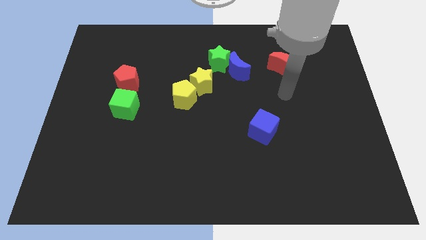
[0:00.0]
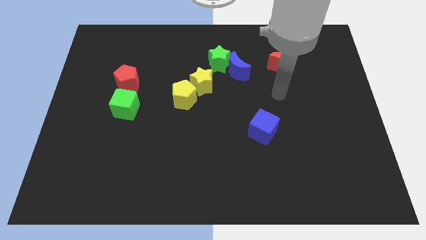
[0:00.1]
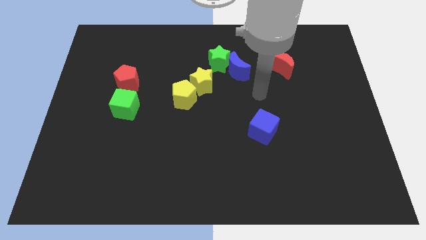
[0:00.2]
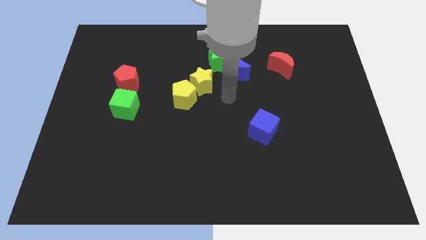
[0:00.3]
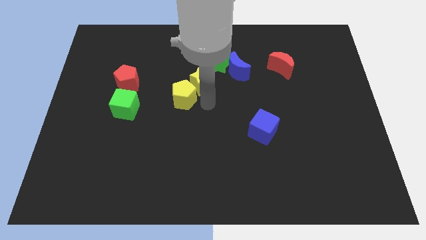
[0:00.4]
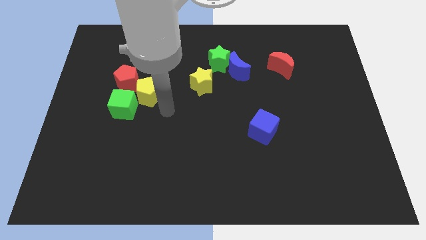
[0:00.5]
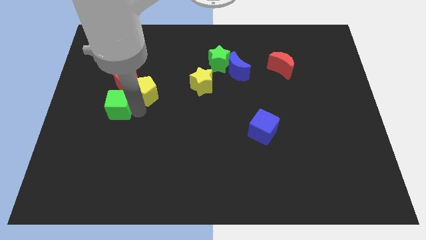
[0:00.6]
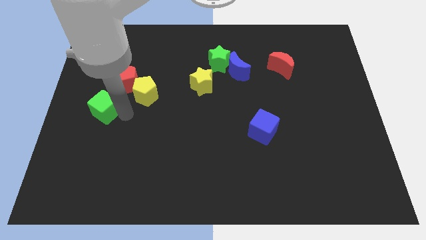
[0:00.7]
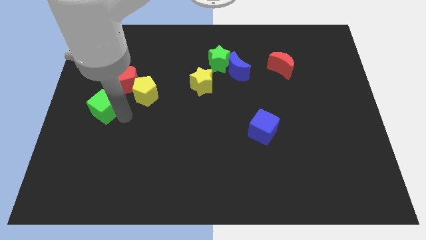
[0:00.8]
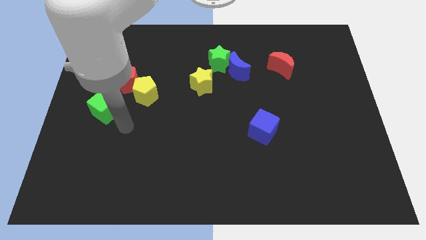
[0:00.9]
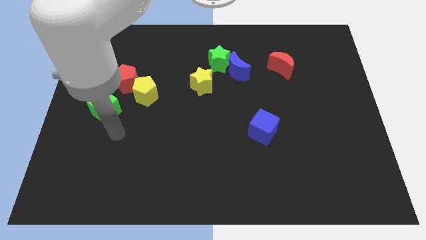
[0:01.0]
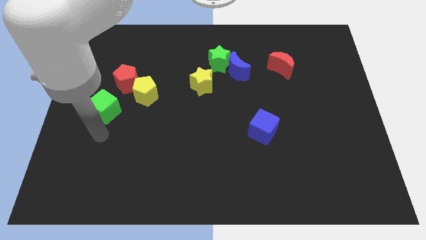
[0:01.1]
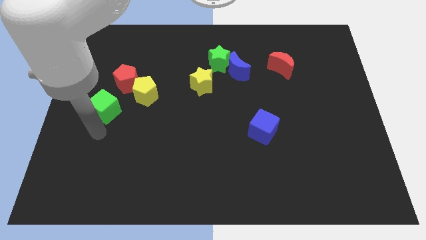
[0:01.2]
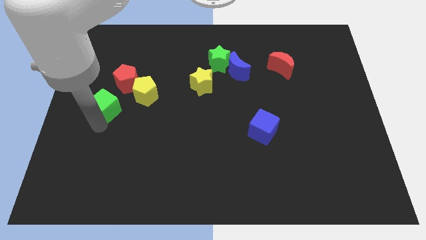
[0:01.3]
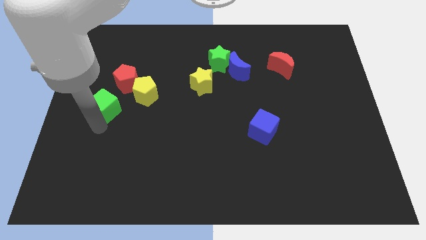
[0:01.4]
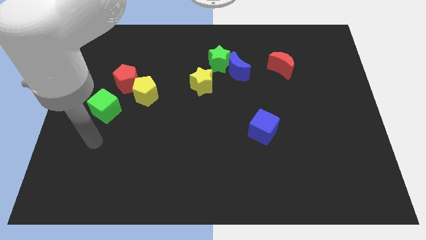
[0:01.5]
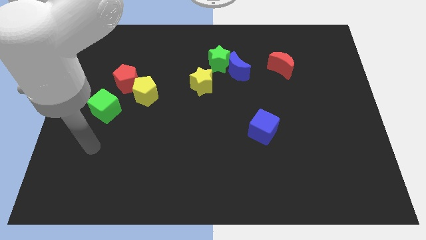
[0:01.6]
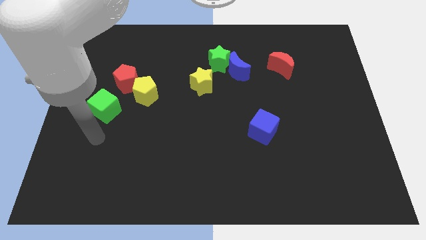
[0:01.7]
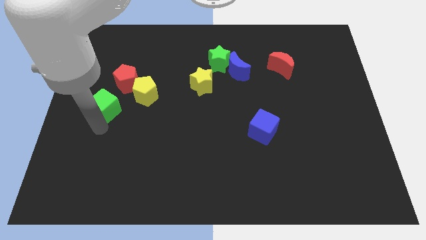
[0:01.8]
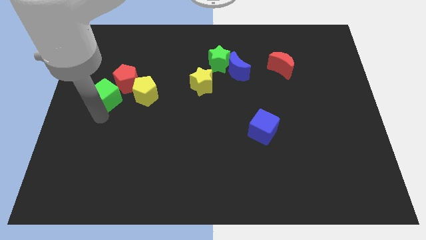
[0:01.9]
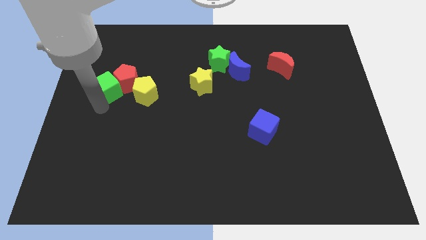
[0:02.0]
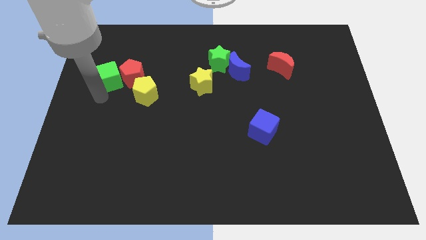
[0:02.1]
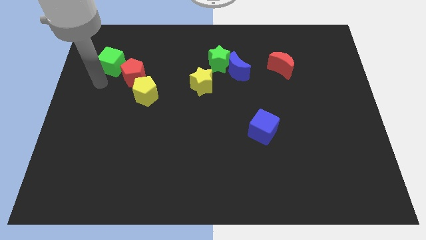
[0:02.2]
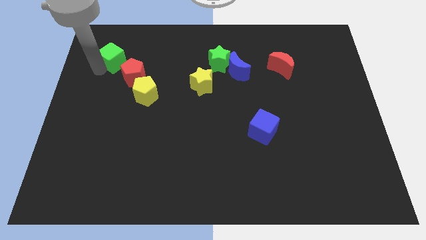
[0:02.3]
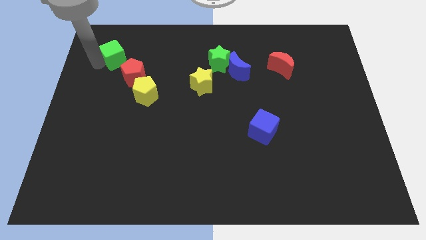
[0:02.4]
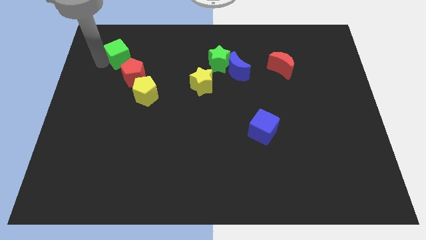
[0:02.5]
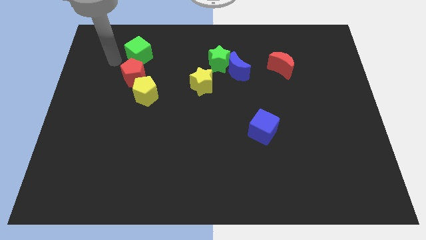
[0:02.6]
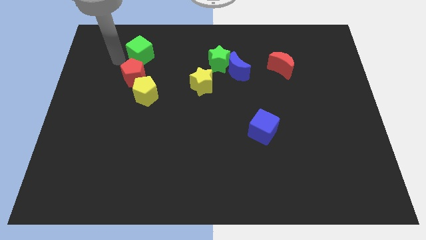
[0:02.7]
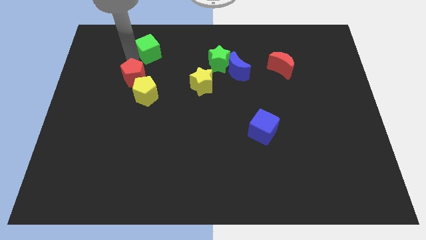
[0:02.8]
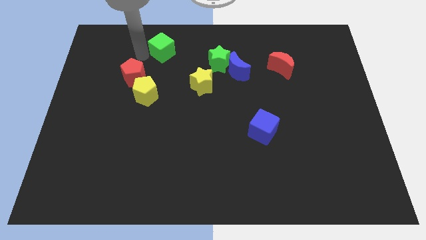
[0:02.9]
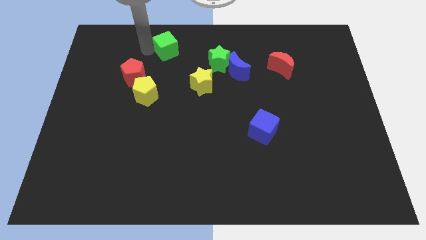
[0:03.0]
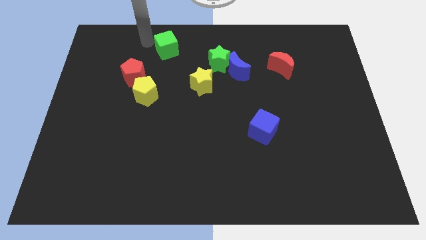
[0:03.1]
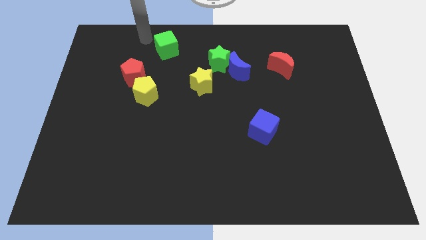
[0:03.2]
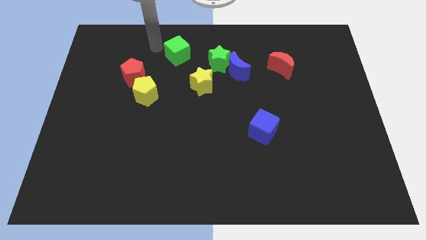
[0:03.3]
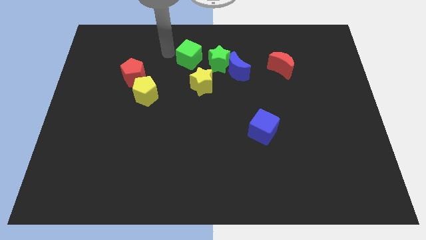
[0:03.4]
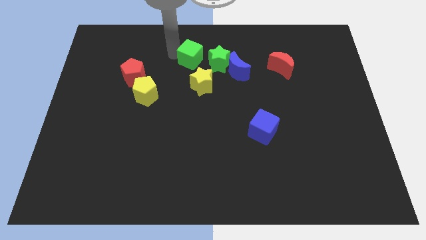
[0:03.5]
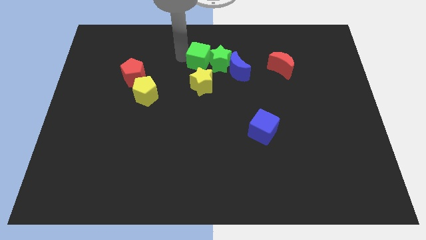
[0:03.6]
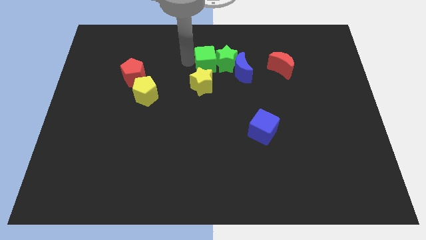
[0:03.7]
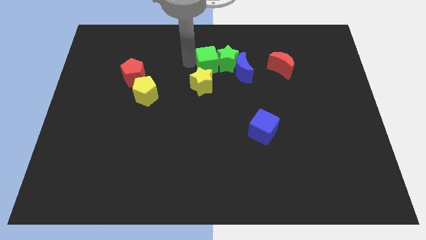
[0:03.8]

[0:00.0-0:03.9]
push the green cube towards the green star

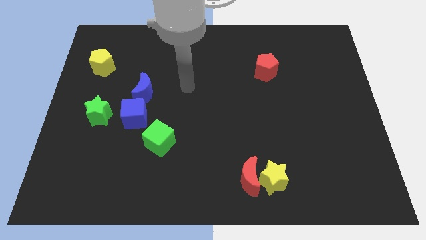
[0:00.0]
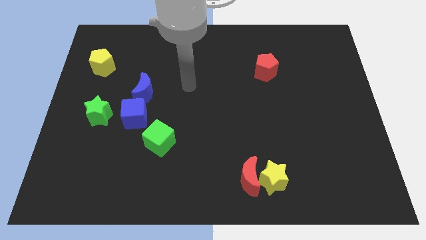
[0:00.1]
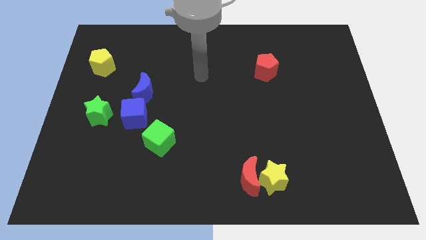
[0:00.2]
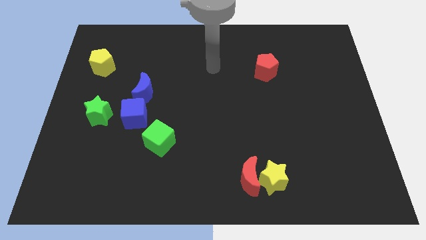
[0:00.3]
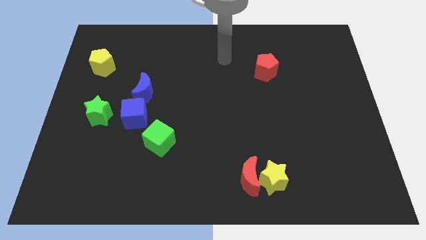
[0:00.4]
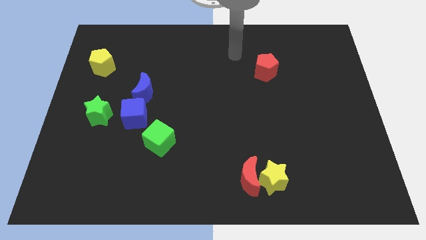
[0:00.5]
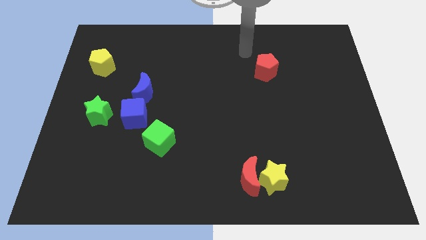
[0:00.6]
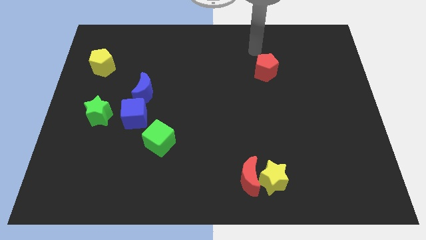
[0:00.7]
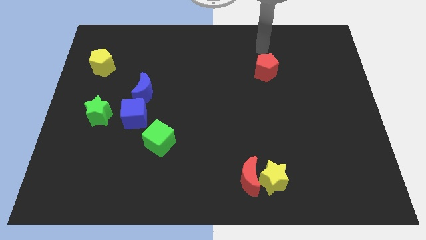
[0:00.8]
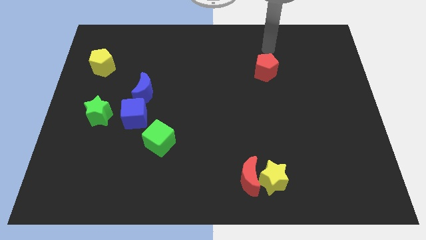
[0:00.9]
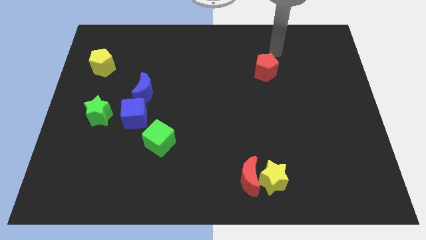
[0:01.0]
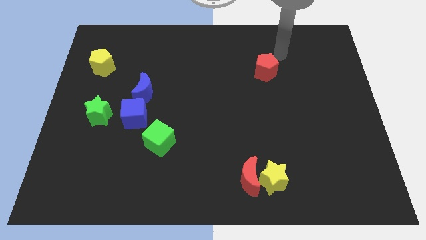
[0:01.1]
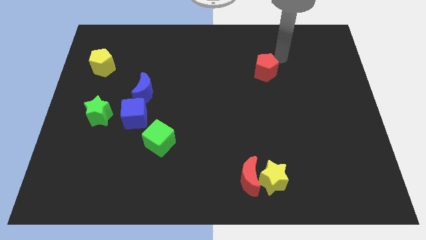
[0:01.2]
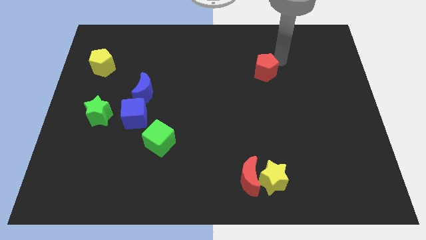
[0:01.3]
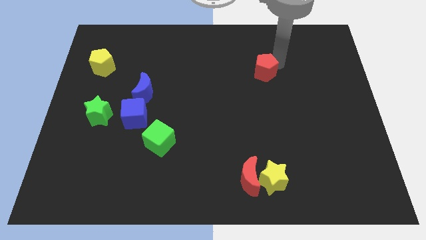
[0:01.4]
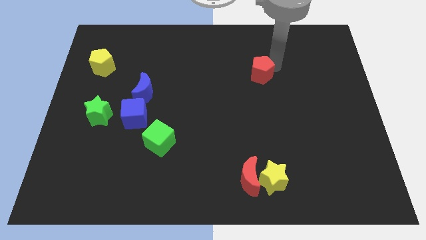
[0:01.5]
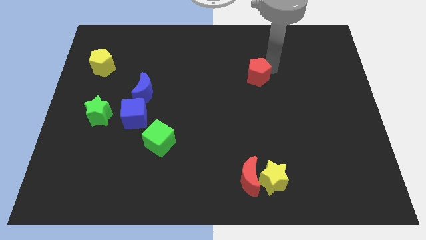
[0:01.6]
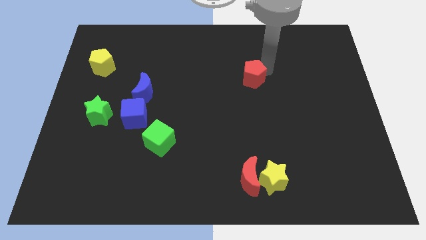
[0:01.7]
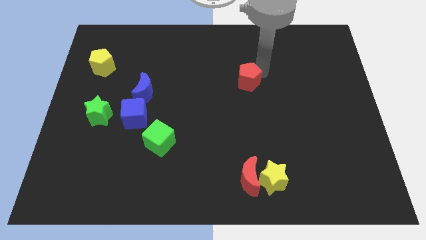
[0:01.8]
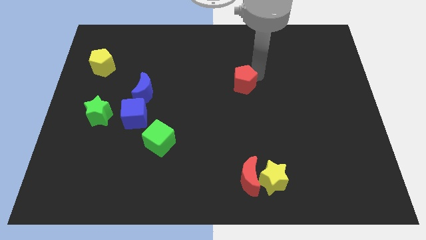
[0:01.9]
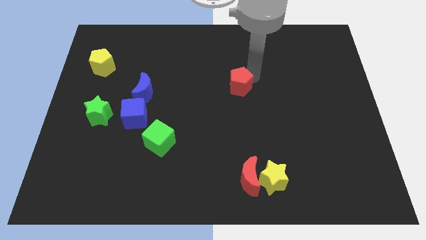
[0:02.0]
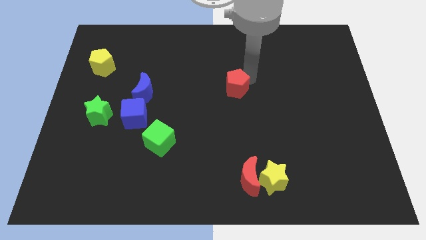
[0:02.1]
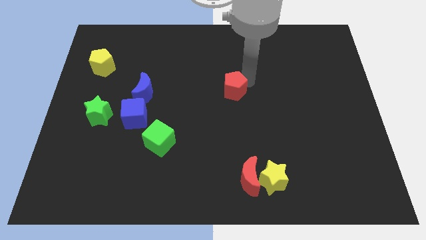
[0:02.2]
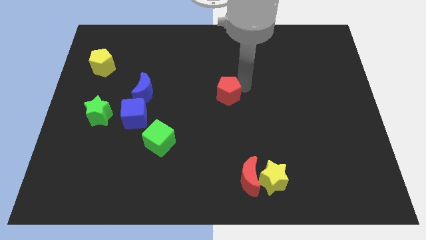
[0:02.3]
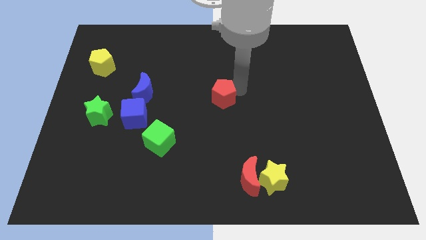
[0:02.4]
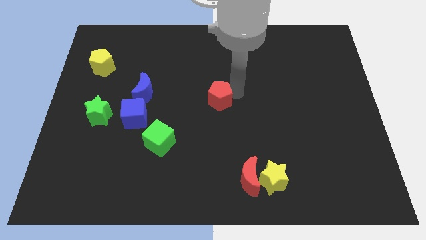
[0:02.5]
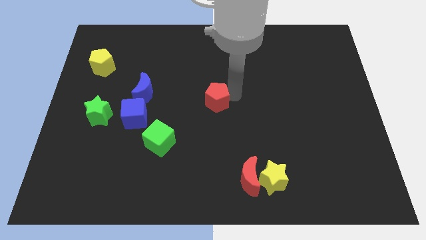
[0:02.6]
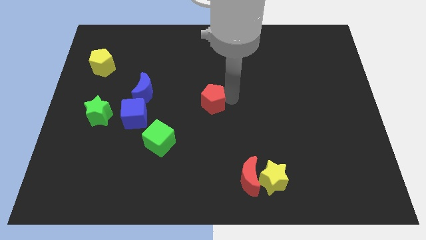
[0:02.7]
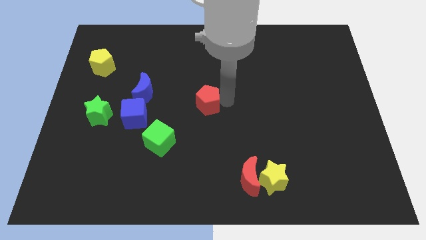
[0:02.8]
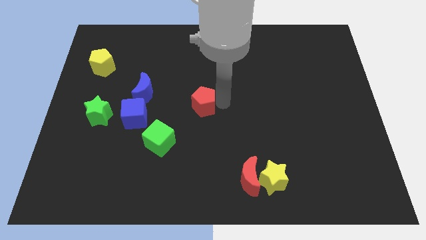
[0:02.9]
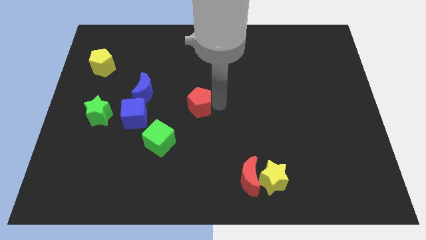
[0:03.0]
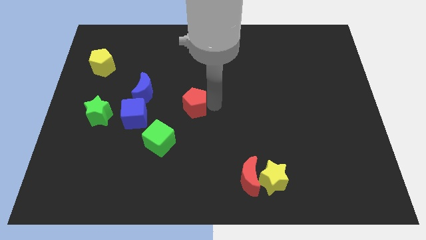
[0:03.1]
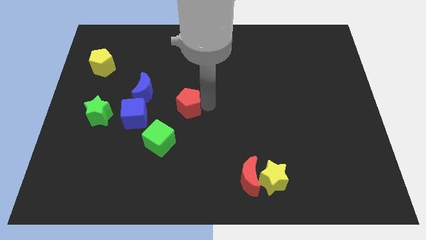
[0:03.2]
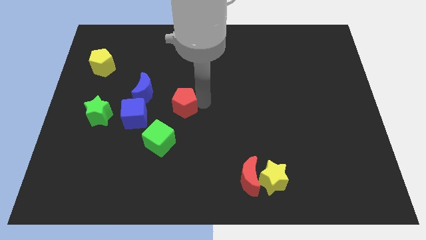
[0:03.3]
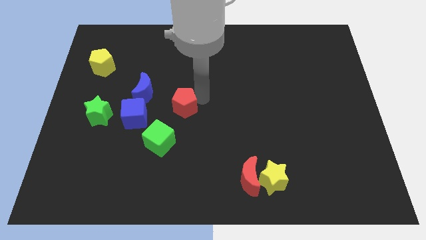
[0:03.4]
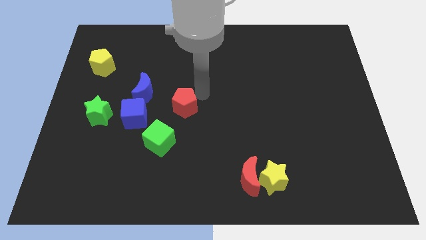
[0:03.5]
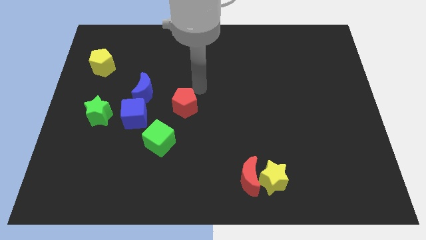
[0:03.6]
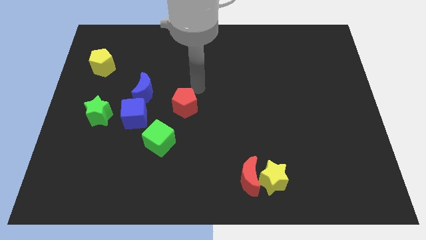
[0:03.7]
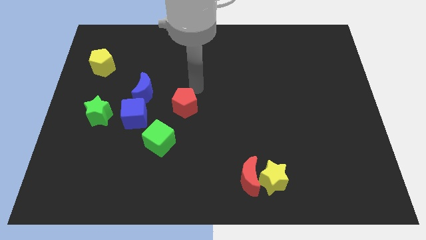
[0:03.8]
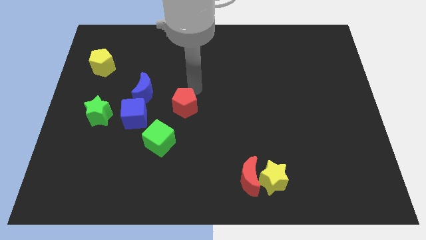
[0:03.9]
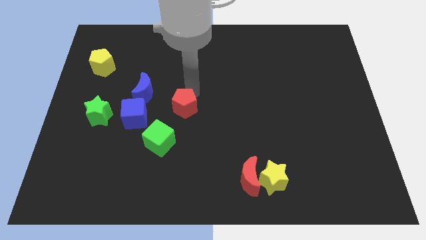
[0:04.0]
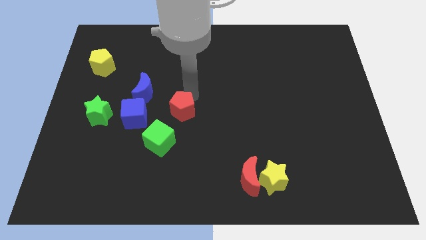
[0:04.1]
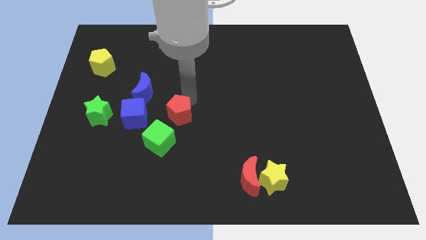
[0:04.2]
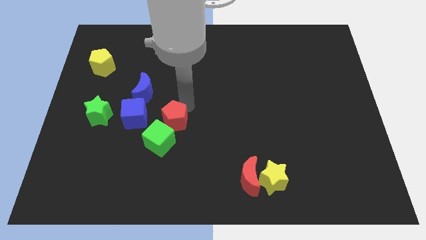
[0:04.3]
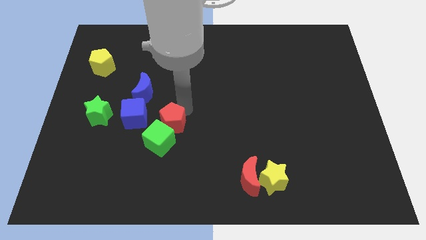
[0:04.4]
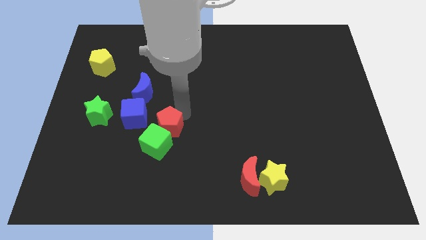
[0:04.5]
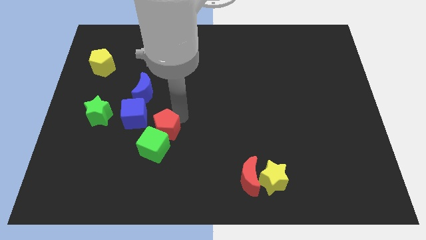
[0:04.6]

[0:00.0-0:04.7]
push the red pentagon to the green cube

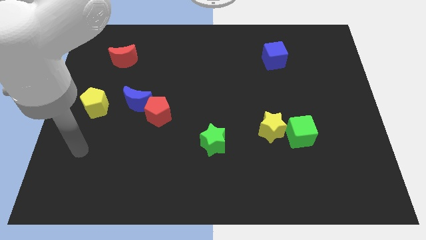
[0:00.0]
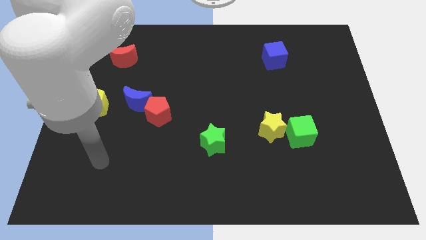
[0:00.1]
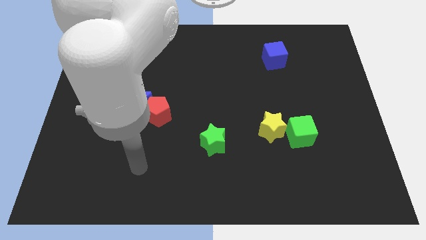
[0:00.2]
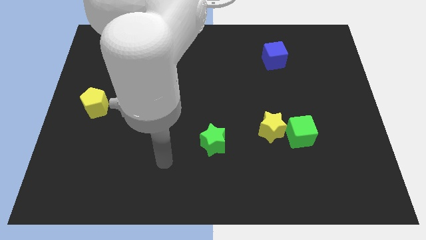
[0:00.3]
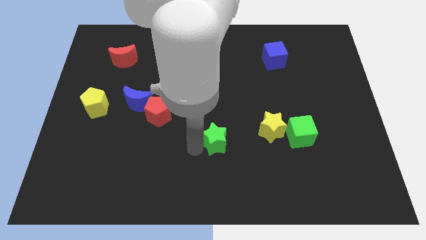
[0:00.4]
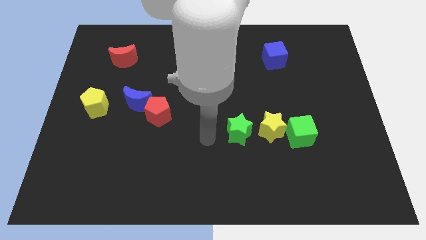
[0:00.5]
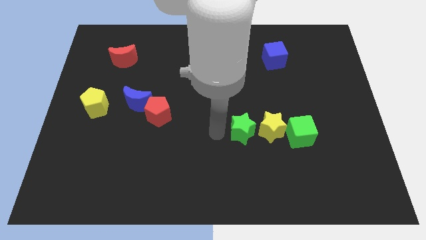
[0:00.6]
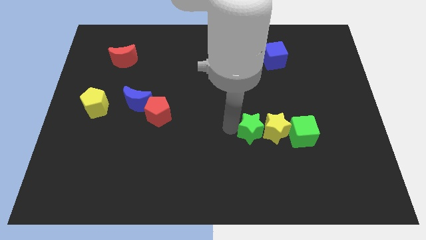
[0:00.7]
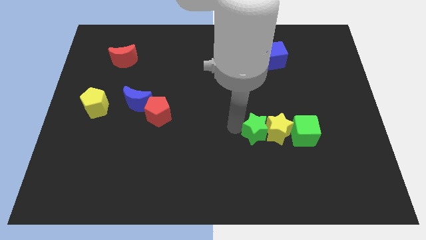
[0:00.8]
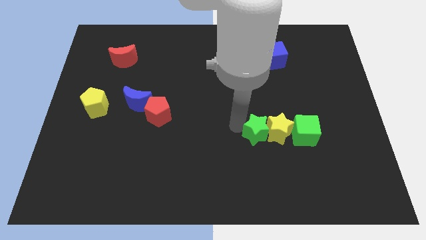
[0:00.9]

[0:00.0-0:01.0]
move the green star close to the yellow star
